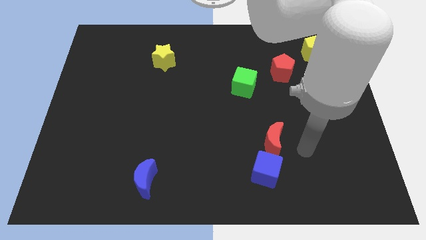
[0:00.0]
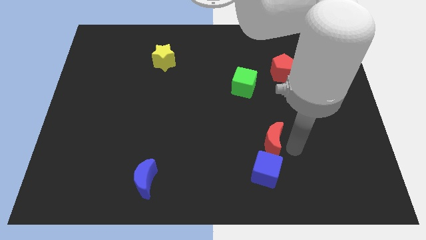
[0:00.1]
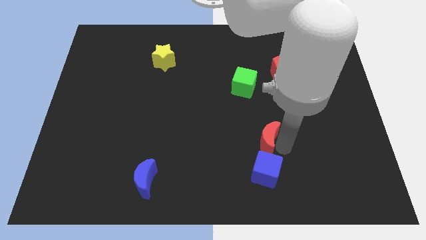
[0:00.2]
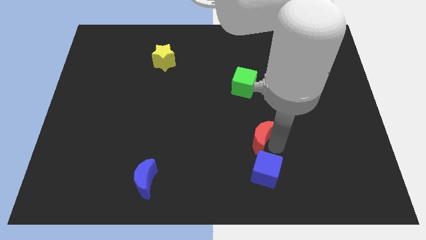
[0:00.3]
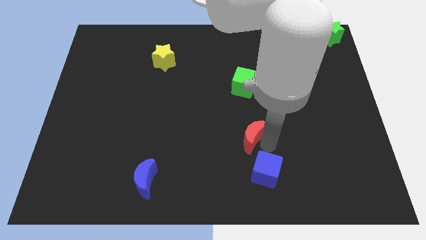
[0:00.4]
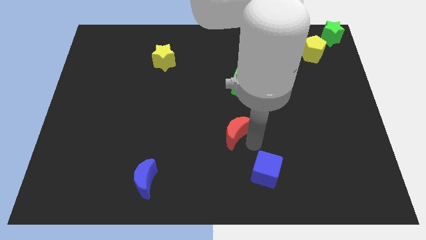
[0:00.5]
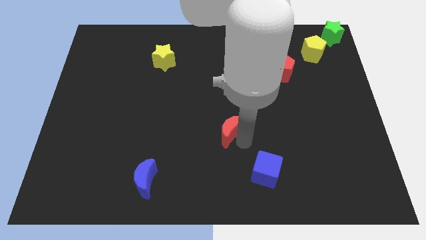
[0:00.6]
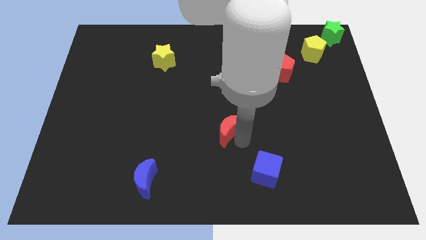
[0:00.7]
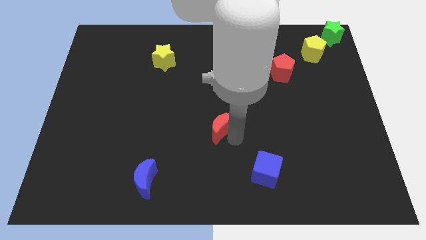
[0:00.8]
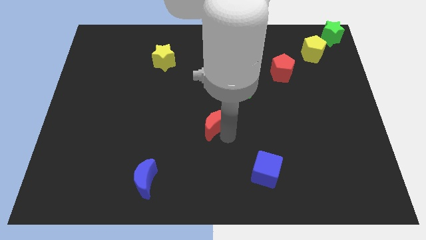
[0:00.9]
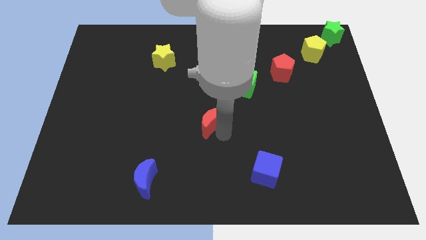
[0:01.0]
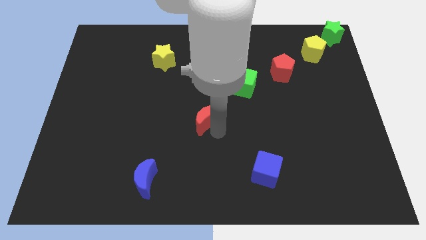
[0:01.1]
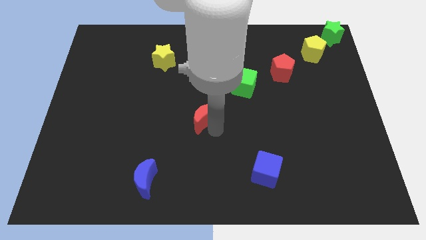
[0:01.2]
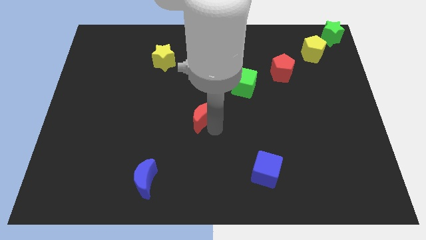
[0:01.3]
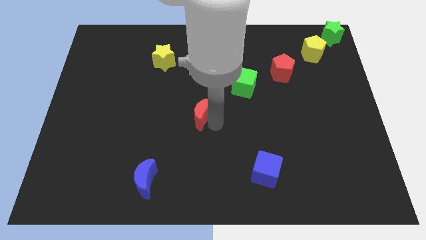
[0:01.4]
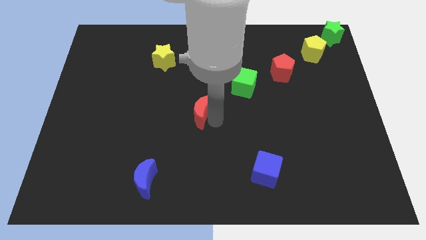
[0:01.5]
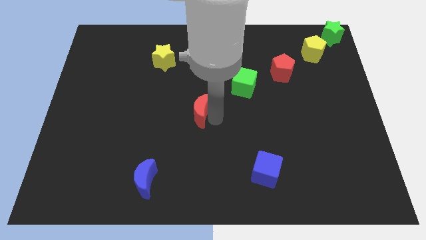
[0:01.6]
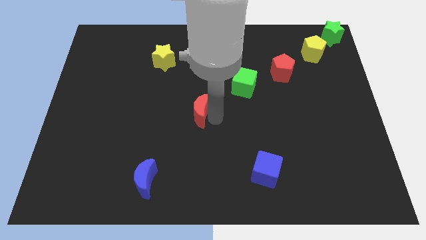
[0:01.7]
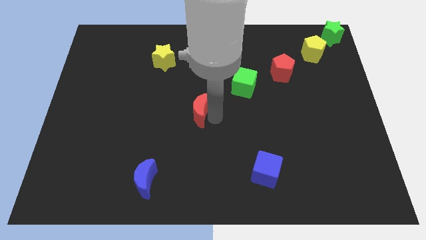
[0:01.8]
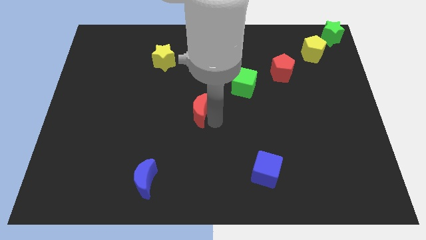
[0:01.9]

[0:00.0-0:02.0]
place red crescent diagonal to green cube

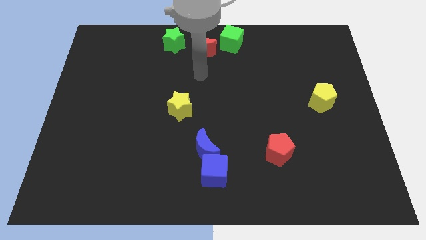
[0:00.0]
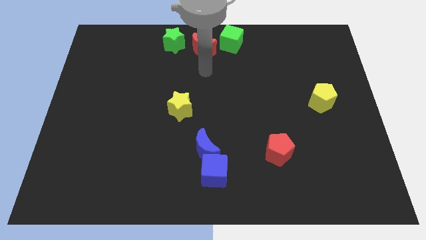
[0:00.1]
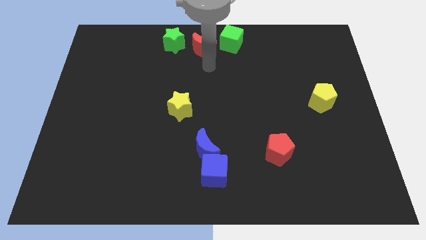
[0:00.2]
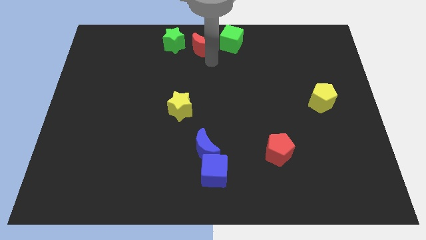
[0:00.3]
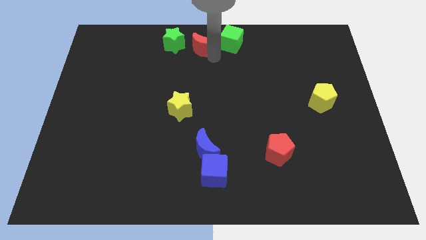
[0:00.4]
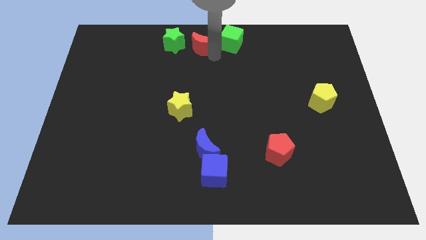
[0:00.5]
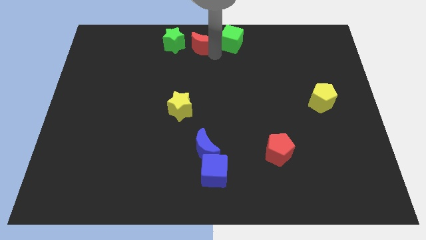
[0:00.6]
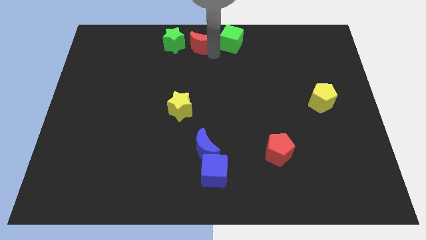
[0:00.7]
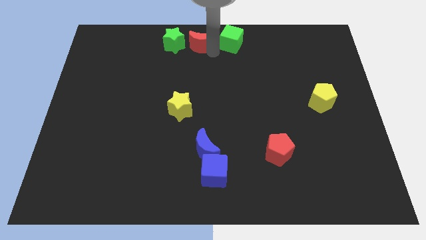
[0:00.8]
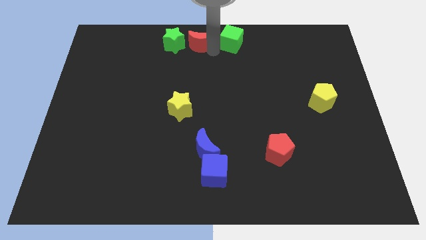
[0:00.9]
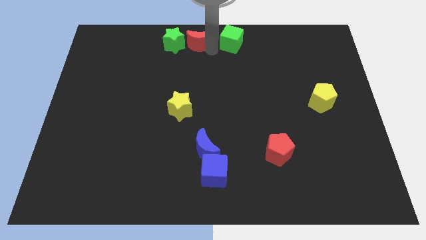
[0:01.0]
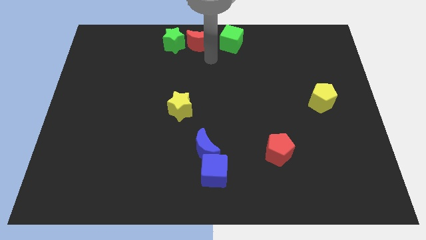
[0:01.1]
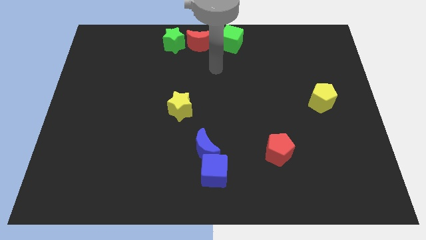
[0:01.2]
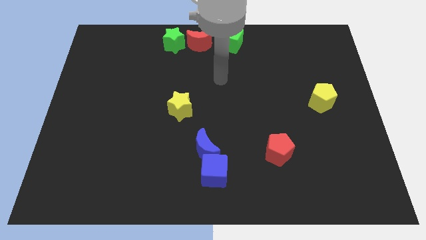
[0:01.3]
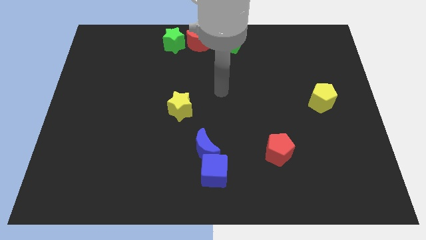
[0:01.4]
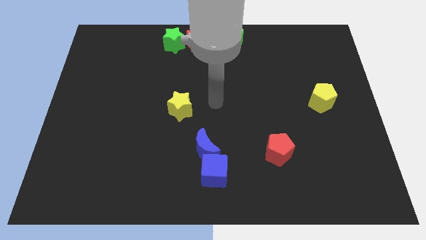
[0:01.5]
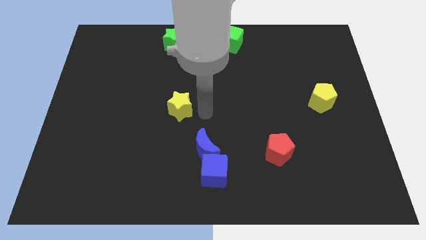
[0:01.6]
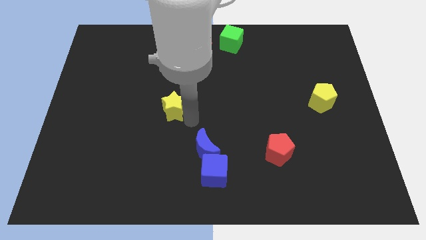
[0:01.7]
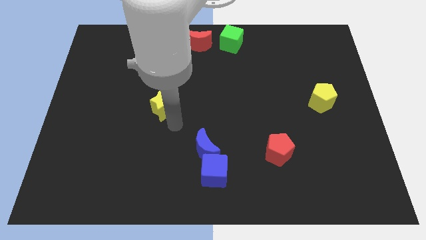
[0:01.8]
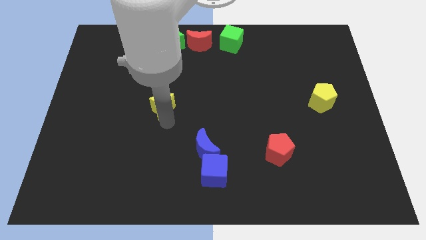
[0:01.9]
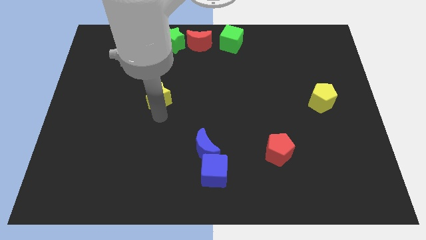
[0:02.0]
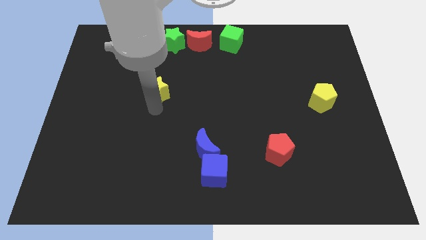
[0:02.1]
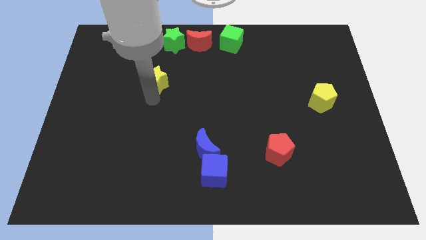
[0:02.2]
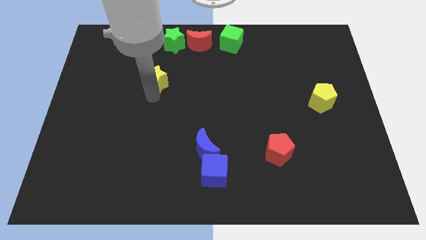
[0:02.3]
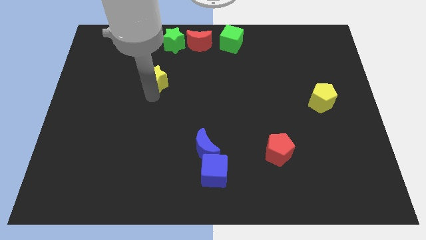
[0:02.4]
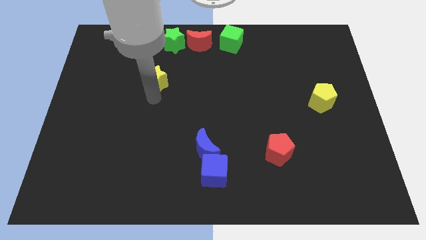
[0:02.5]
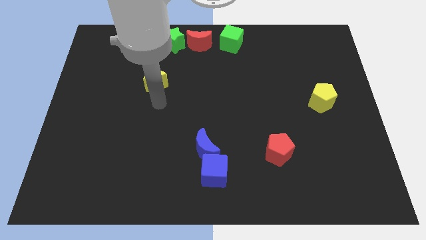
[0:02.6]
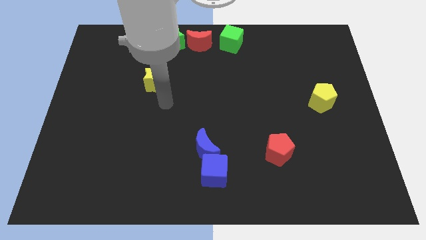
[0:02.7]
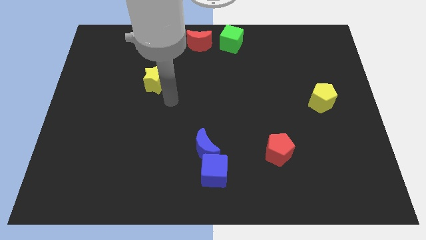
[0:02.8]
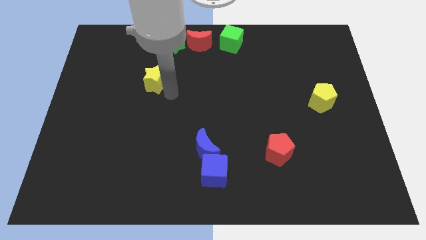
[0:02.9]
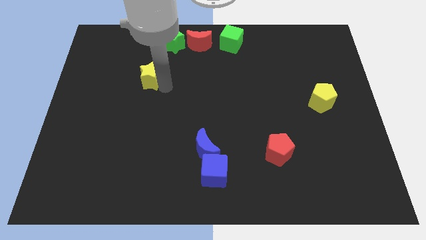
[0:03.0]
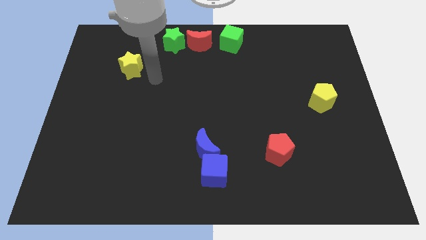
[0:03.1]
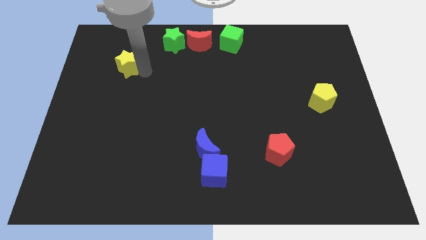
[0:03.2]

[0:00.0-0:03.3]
place the yellow star diagonal to the green star

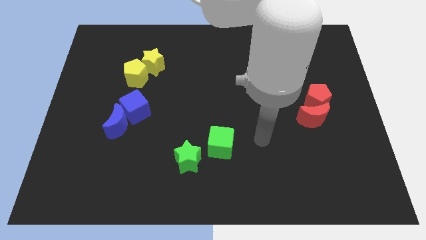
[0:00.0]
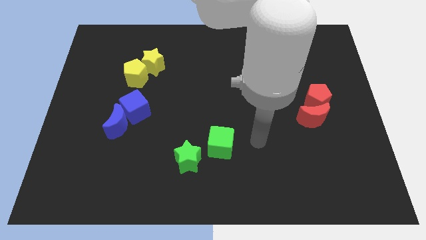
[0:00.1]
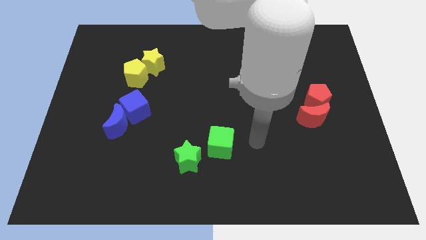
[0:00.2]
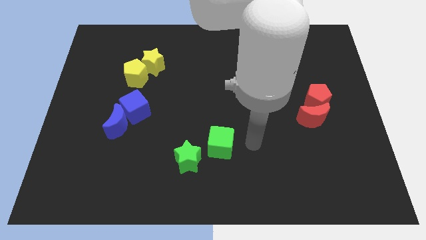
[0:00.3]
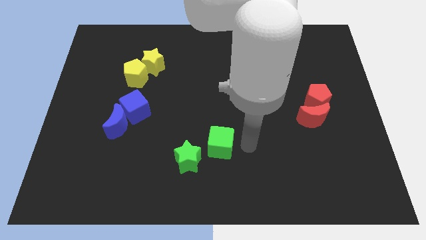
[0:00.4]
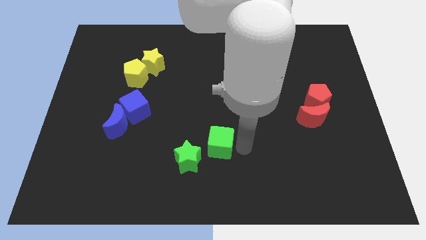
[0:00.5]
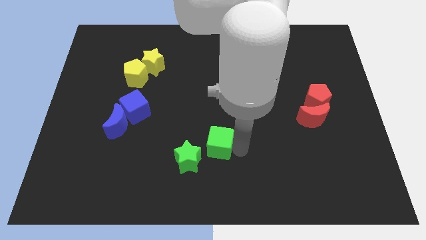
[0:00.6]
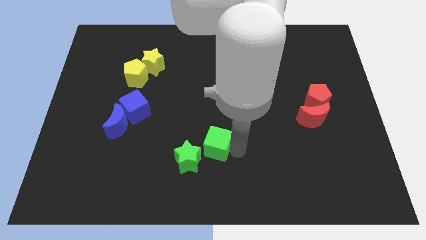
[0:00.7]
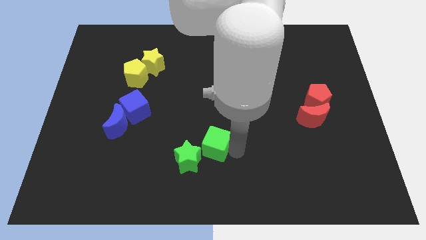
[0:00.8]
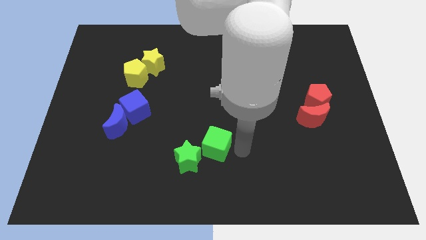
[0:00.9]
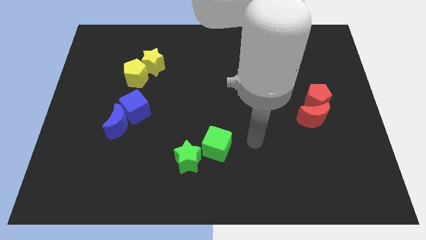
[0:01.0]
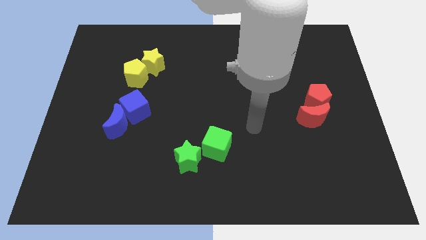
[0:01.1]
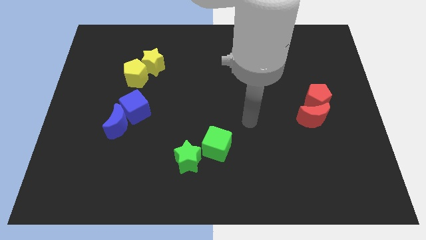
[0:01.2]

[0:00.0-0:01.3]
push the green cube towards the green star

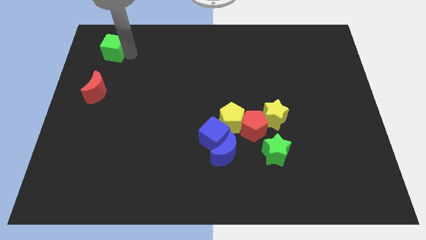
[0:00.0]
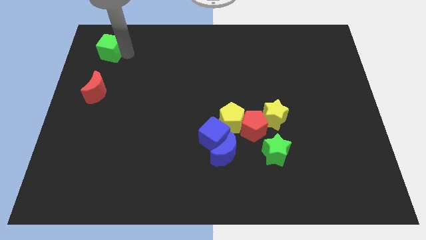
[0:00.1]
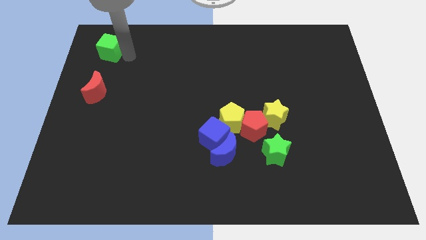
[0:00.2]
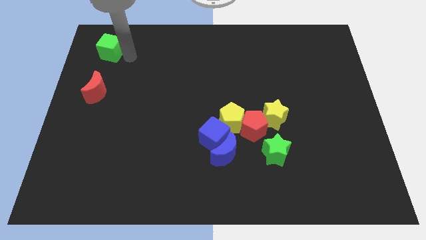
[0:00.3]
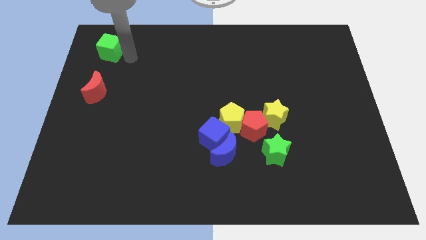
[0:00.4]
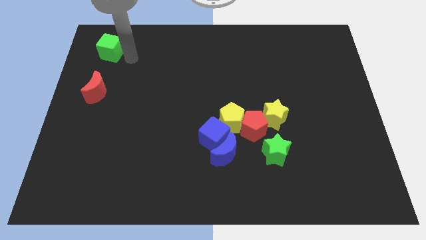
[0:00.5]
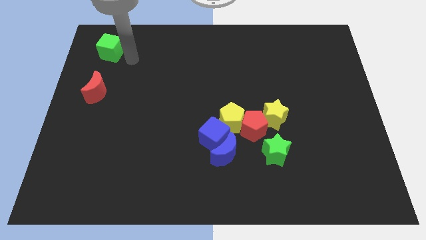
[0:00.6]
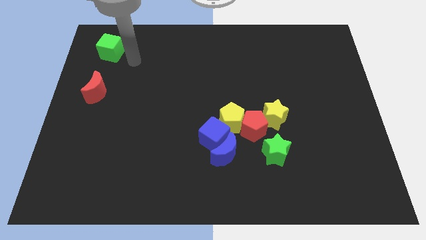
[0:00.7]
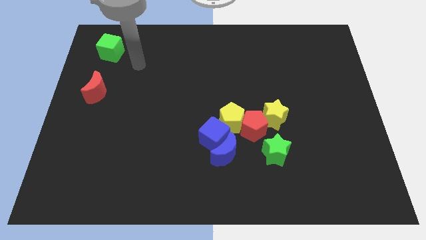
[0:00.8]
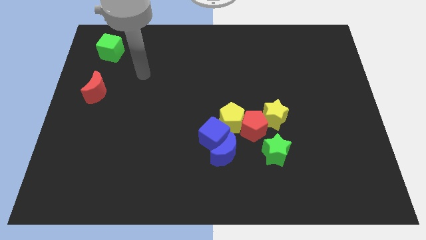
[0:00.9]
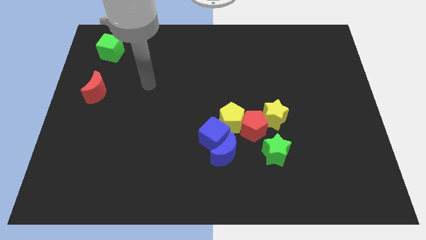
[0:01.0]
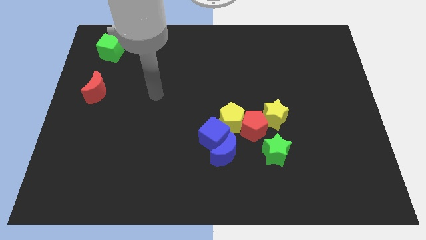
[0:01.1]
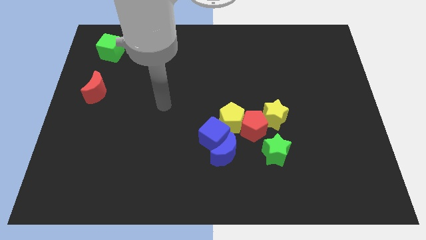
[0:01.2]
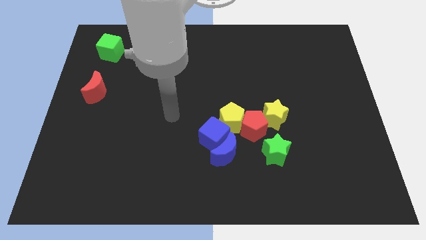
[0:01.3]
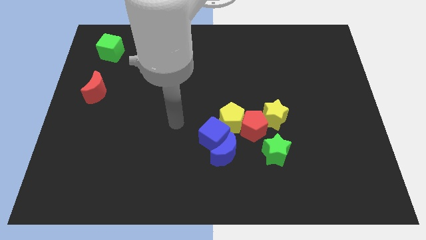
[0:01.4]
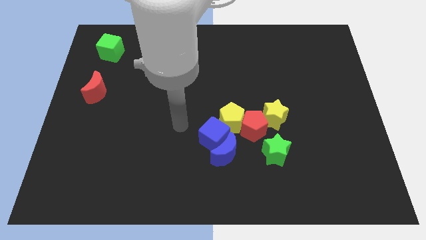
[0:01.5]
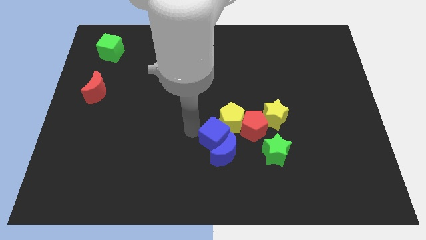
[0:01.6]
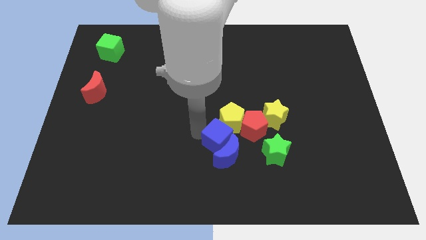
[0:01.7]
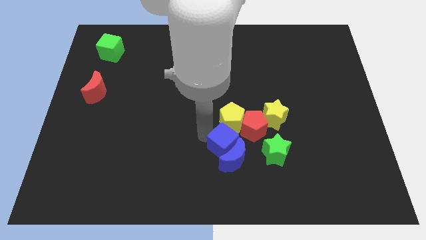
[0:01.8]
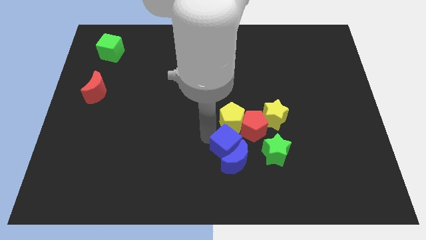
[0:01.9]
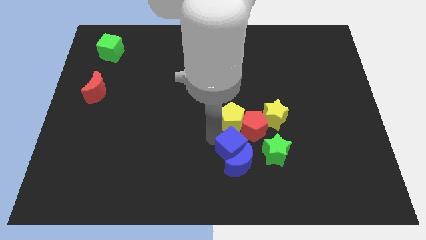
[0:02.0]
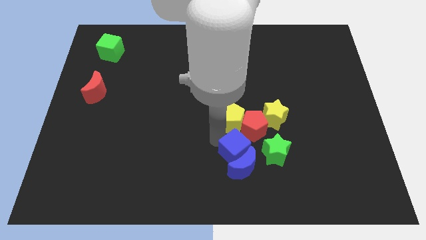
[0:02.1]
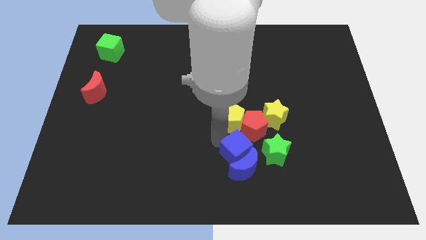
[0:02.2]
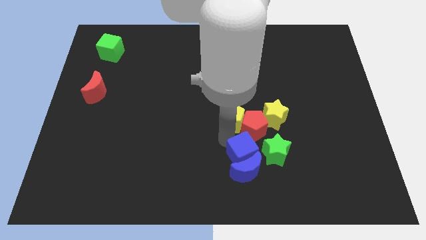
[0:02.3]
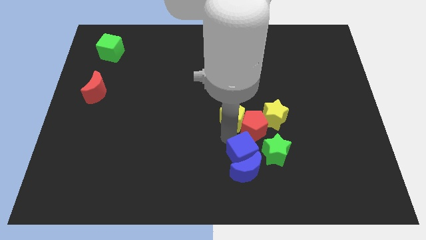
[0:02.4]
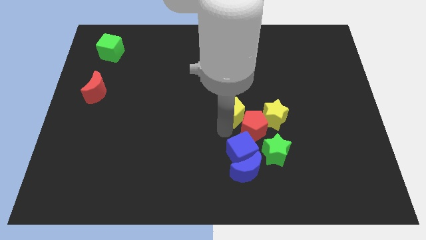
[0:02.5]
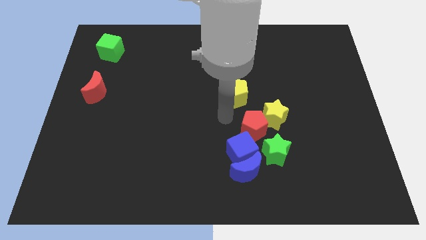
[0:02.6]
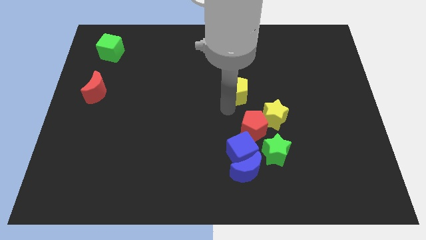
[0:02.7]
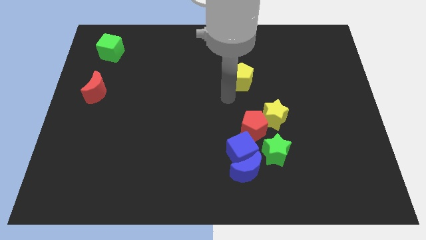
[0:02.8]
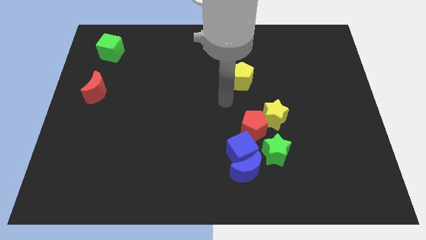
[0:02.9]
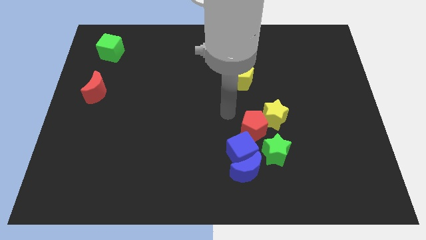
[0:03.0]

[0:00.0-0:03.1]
push yellow pentagon towards top of the board
